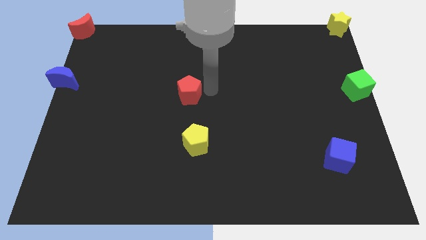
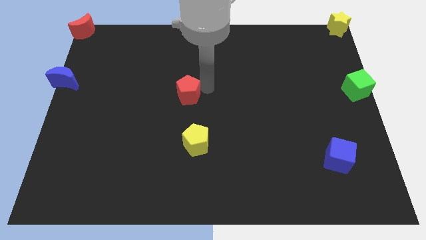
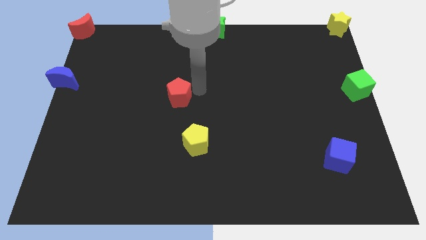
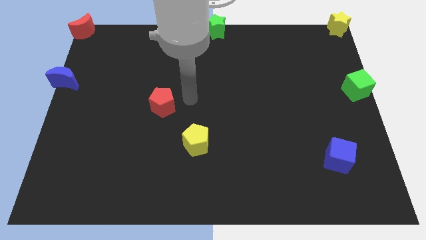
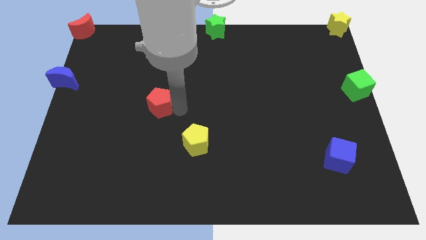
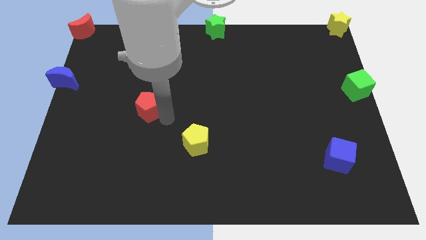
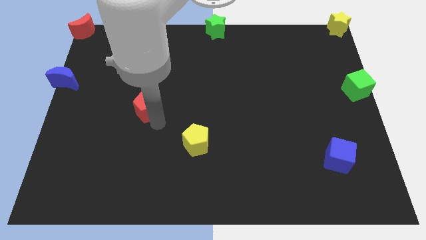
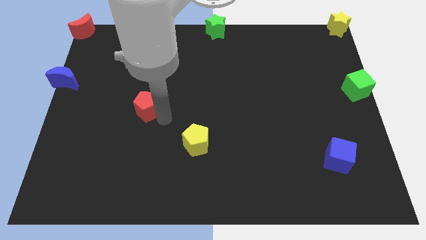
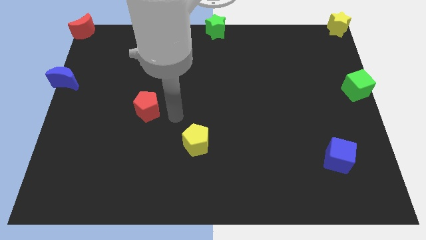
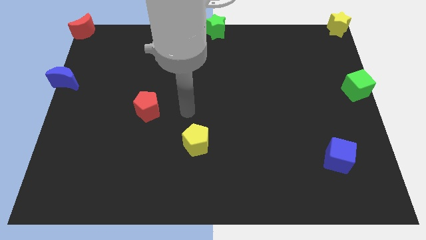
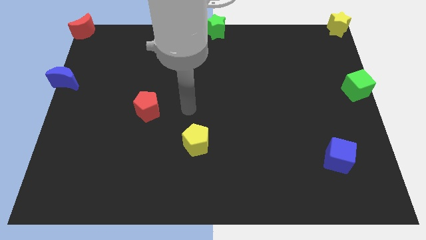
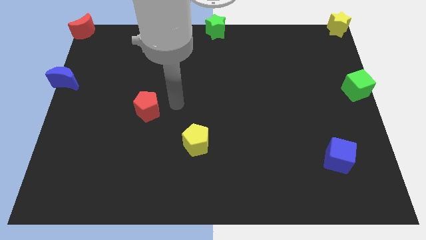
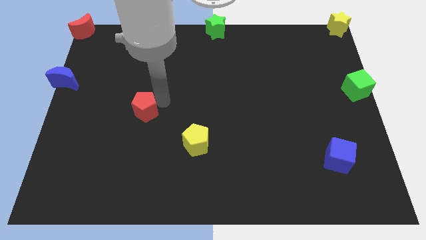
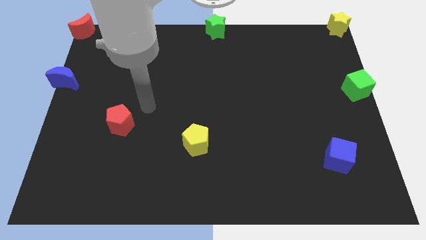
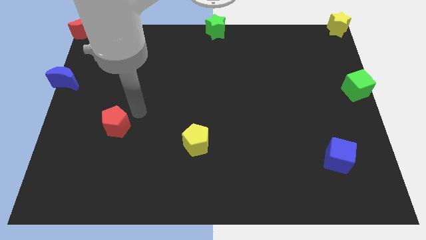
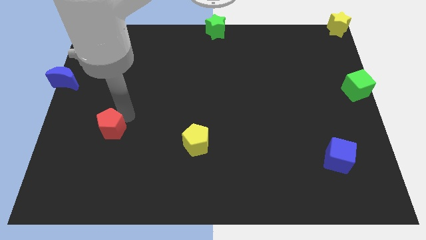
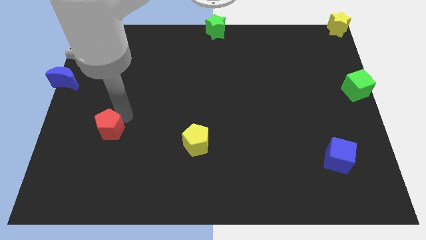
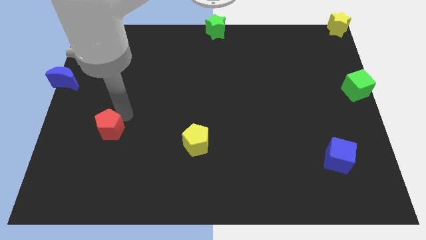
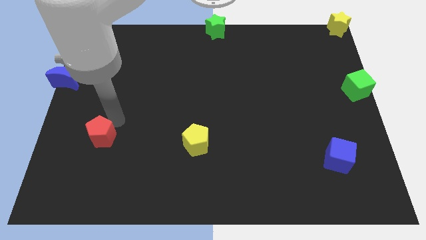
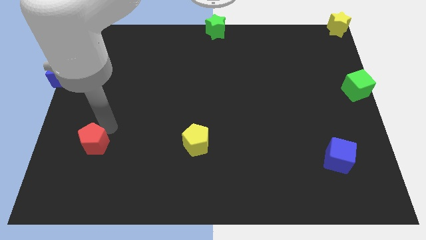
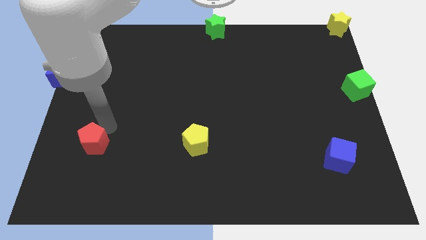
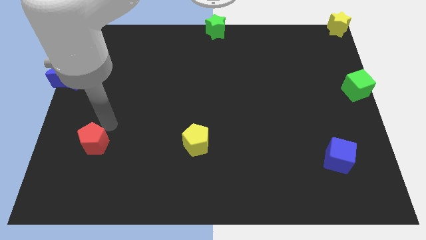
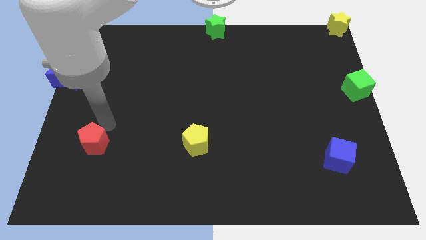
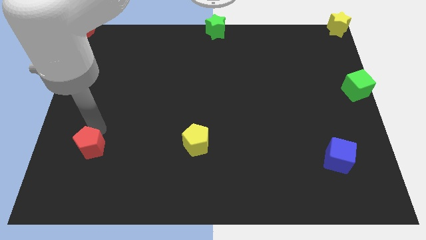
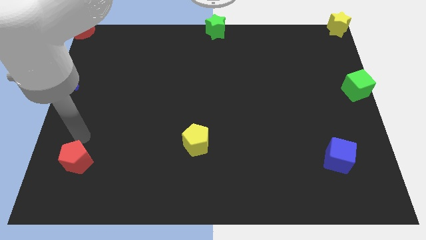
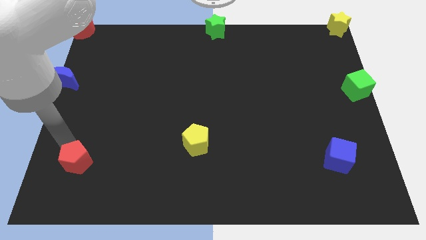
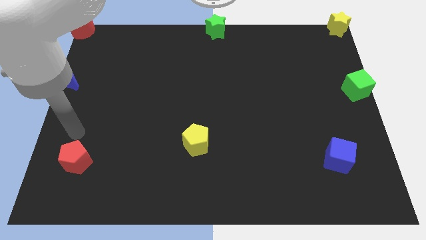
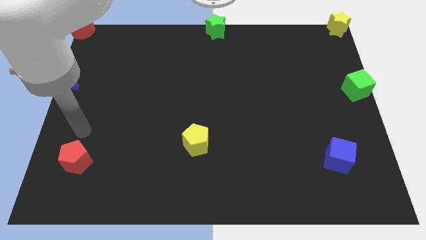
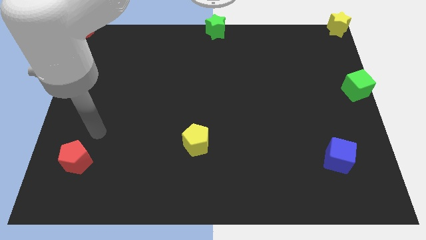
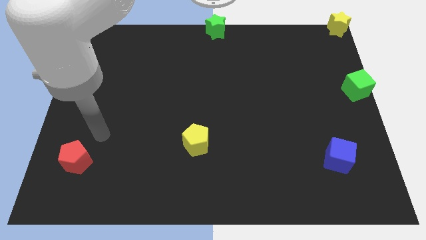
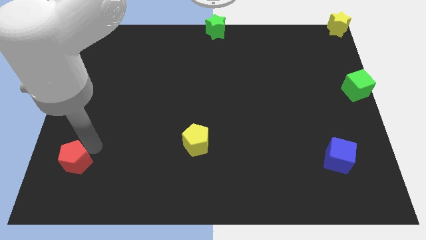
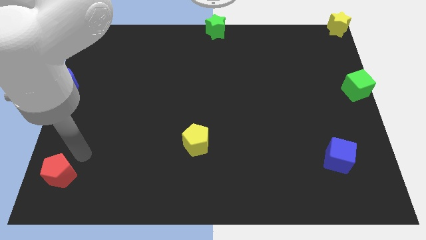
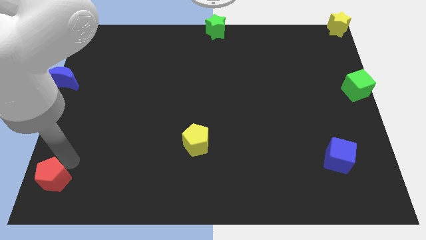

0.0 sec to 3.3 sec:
drag the red pentagon towards the bottom left corner

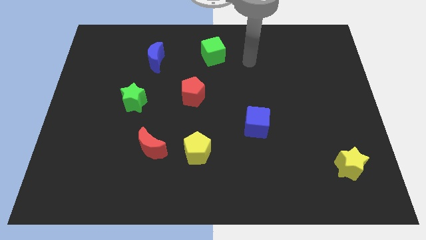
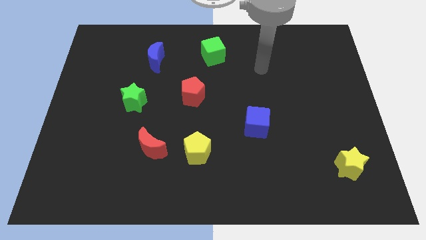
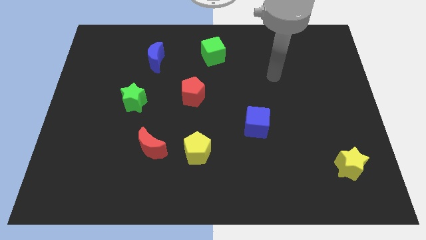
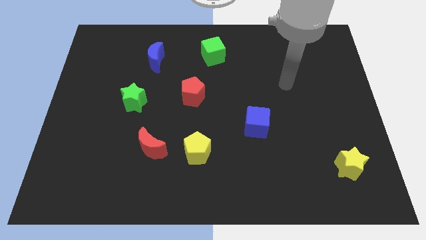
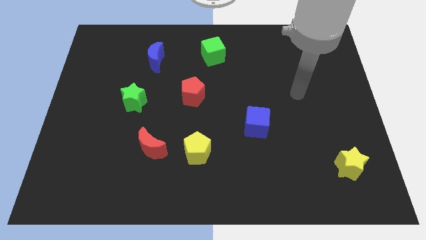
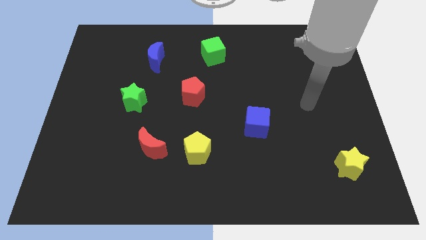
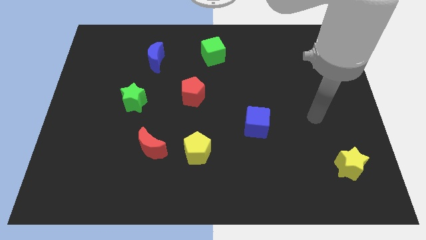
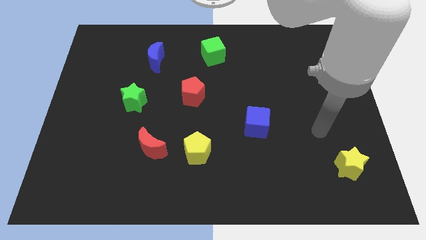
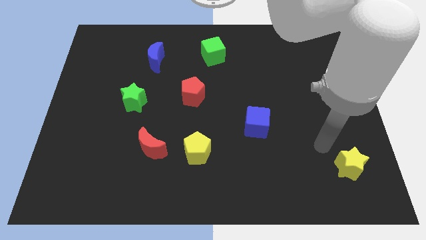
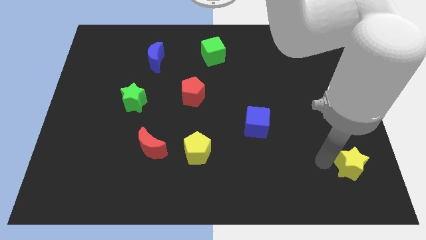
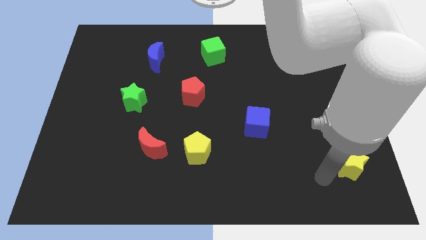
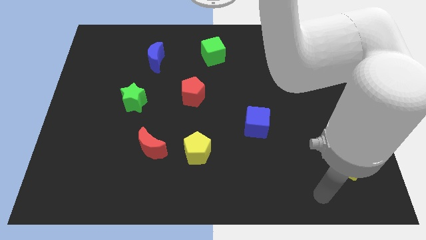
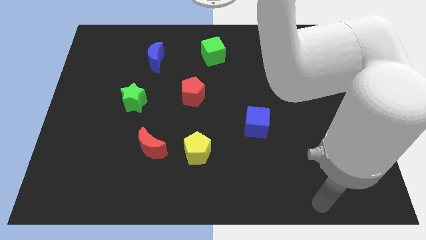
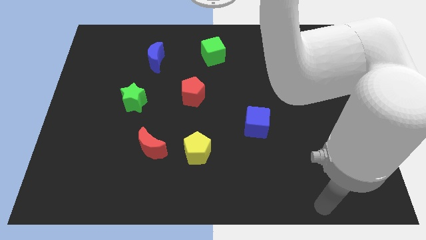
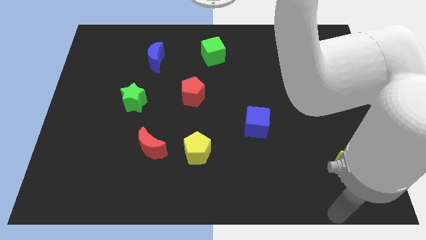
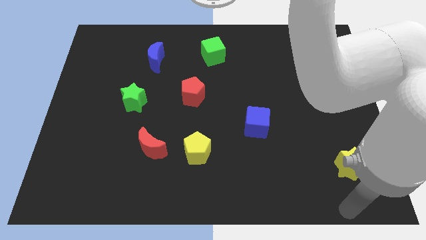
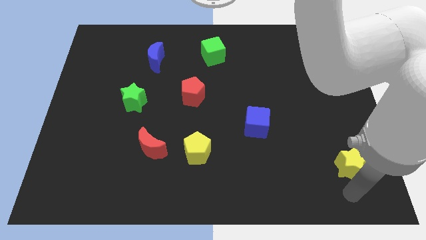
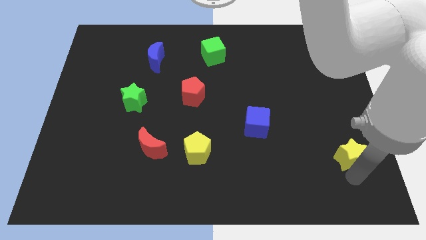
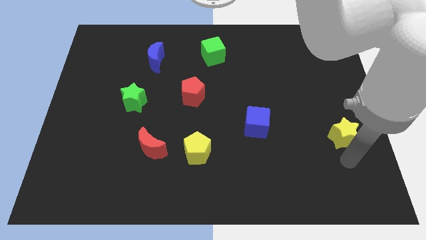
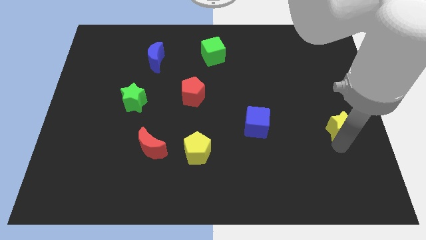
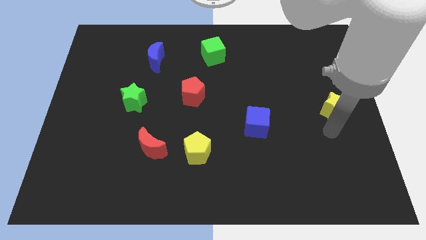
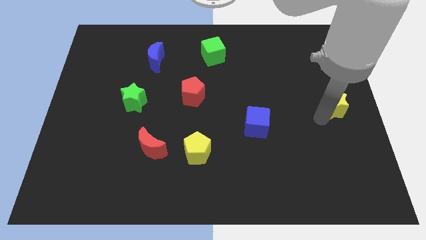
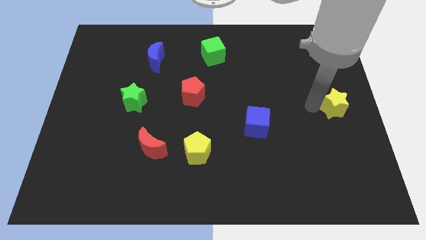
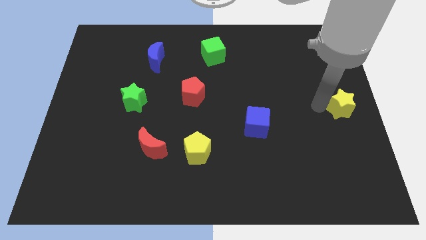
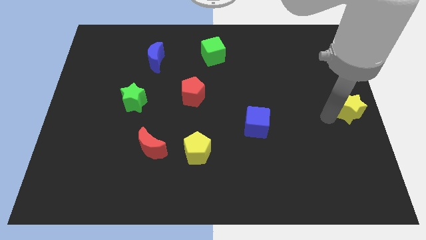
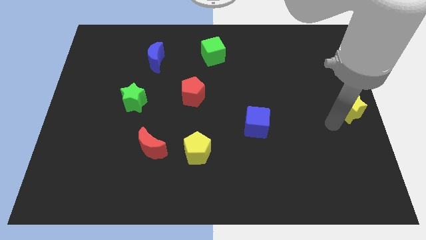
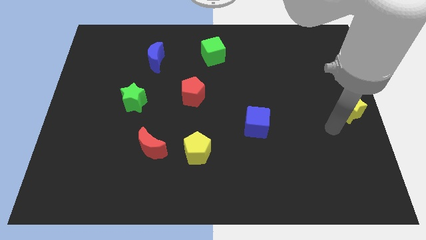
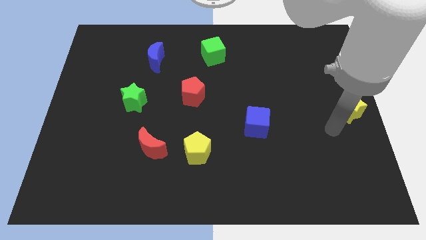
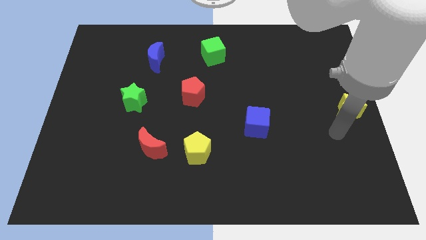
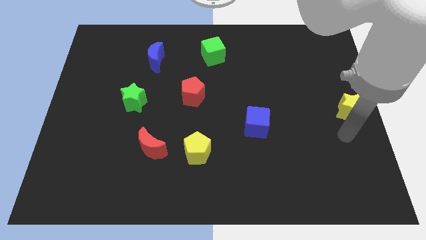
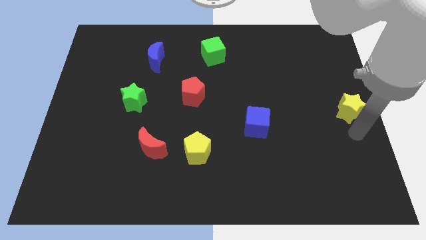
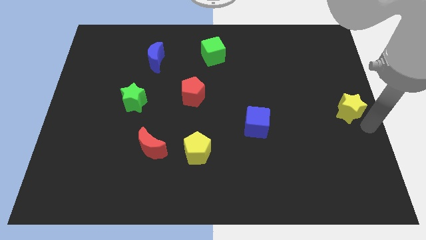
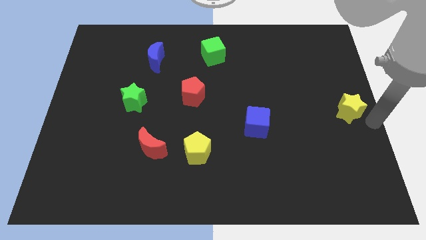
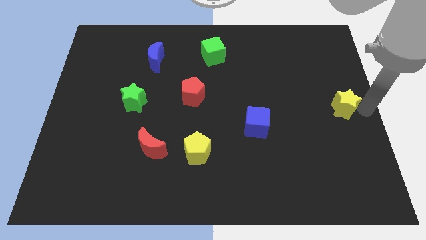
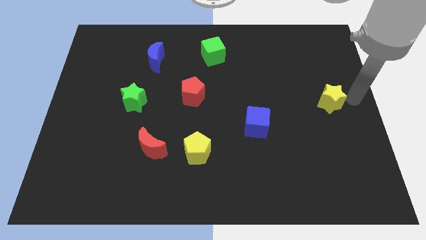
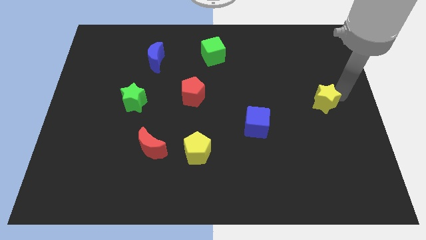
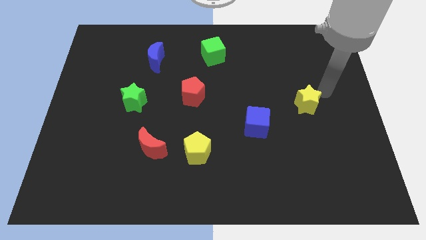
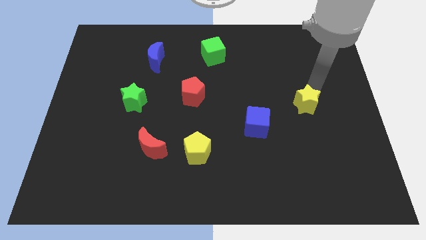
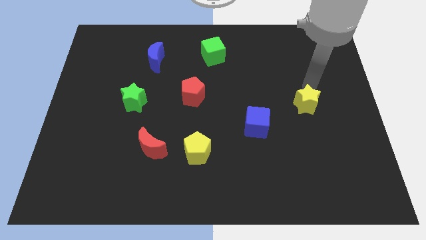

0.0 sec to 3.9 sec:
push the yellow star to the right of the board

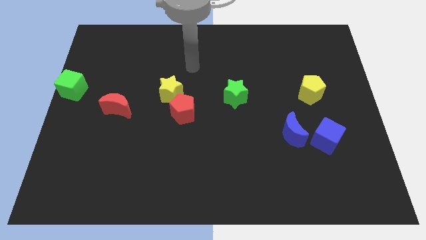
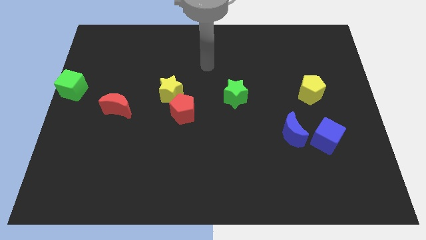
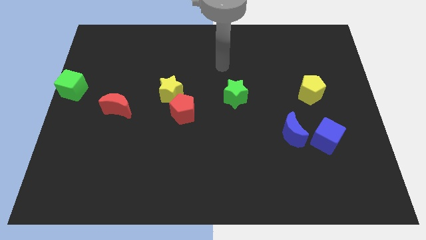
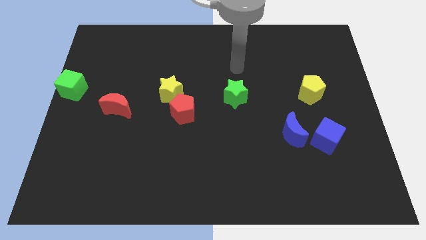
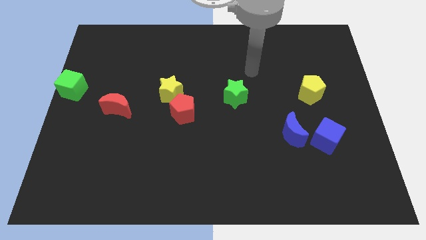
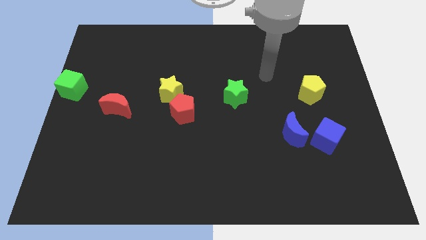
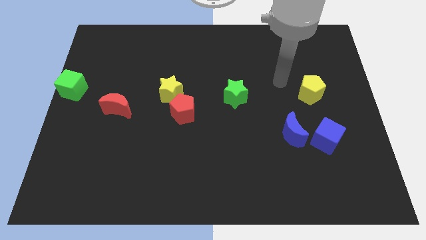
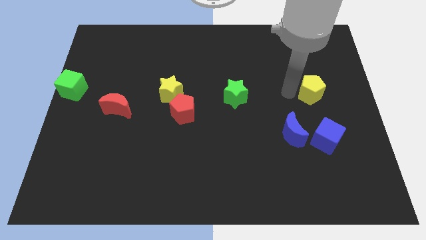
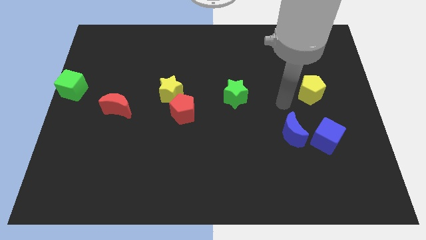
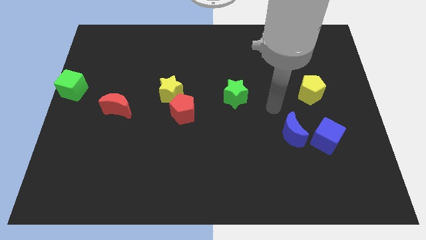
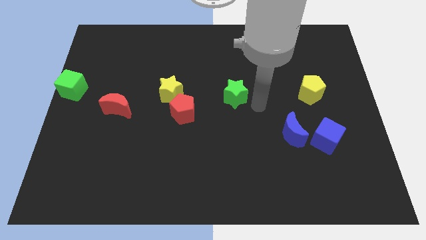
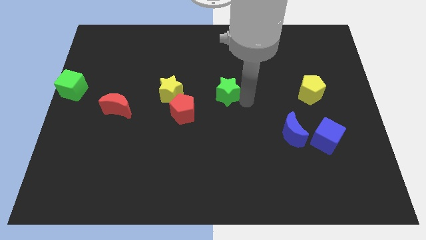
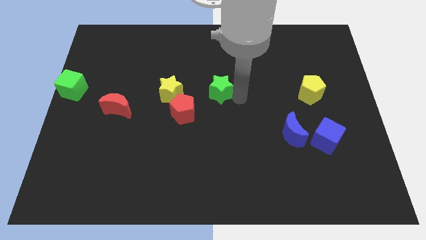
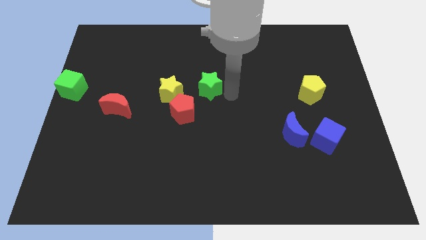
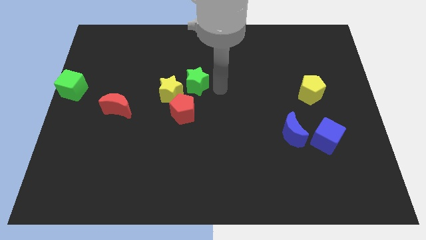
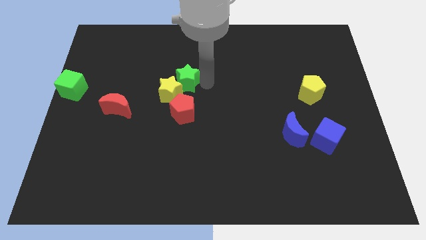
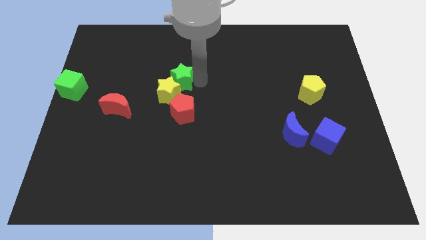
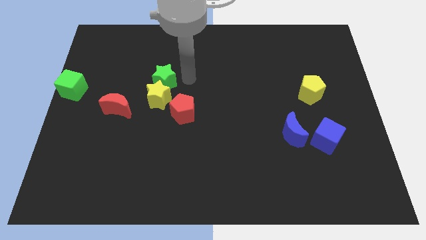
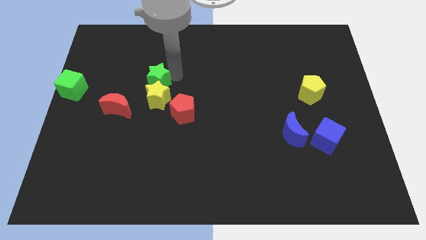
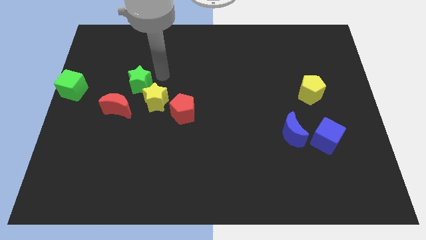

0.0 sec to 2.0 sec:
move the green star to the top of the yellow star
